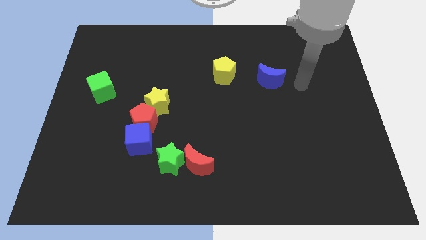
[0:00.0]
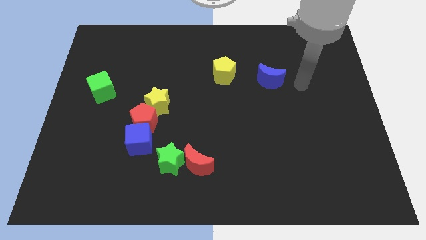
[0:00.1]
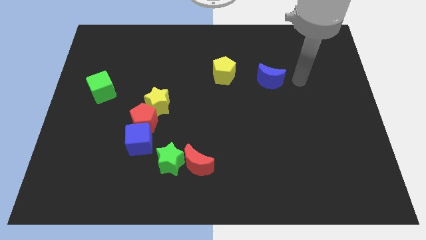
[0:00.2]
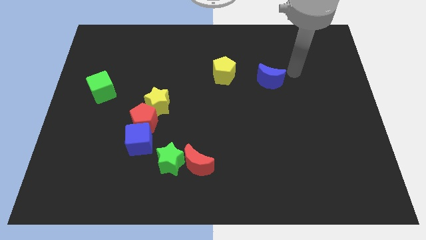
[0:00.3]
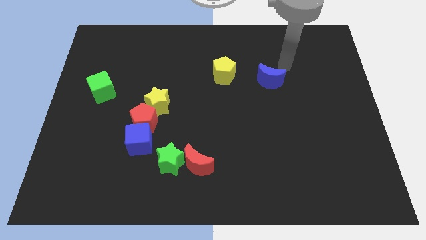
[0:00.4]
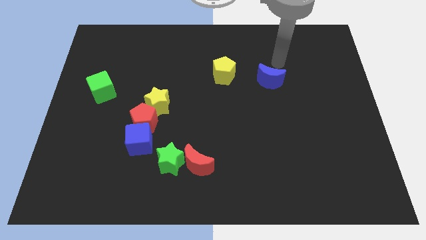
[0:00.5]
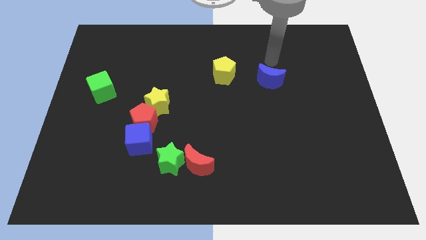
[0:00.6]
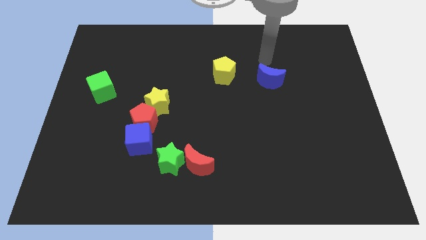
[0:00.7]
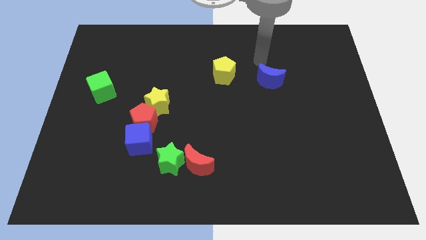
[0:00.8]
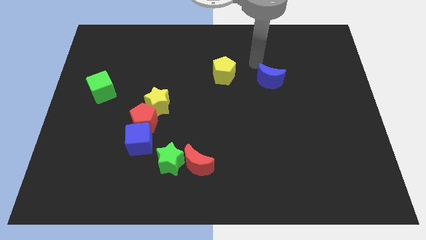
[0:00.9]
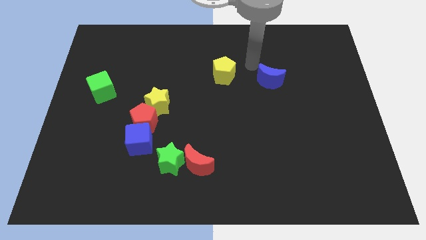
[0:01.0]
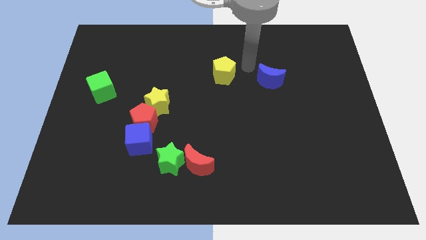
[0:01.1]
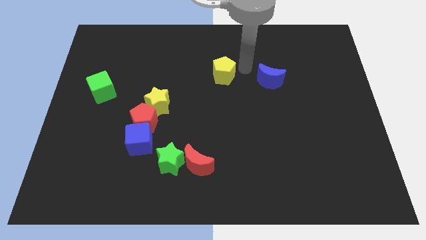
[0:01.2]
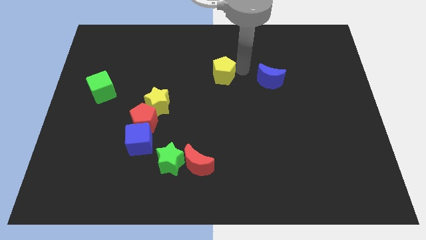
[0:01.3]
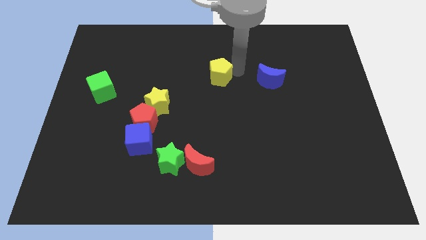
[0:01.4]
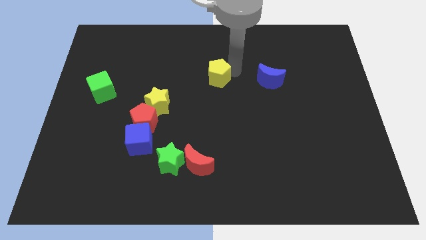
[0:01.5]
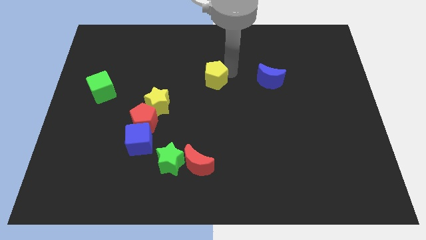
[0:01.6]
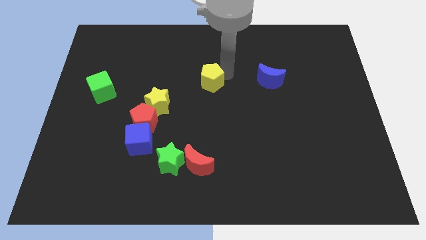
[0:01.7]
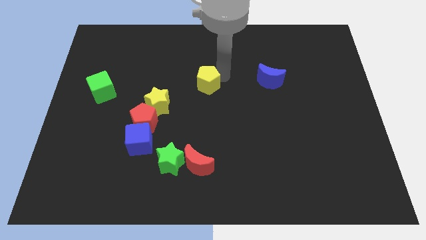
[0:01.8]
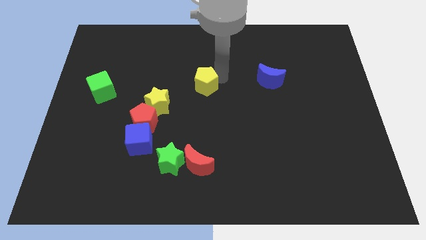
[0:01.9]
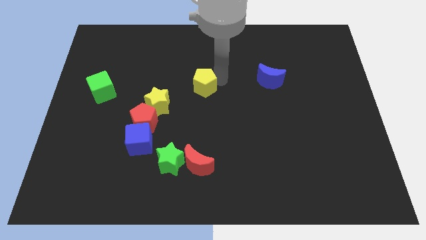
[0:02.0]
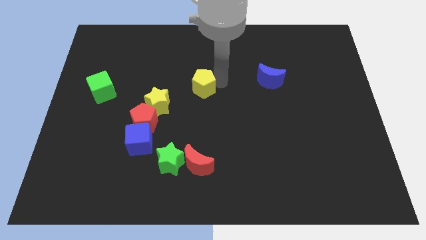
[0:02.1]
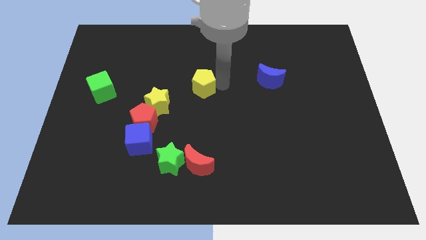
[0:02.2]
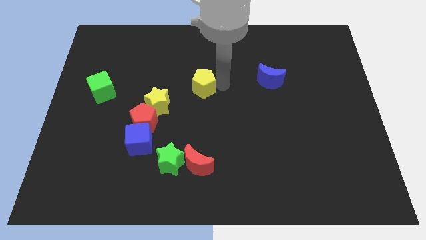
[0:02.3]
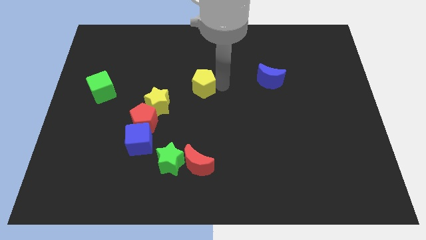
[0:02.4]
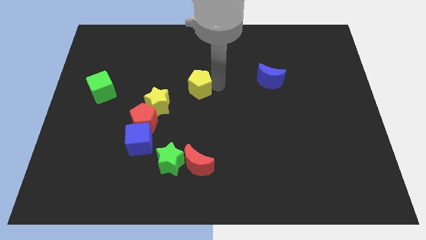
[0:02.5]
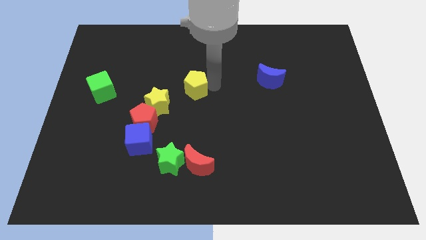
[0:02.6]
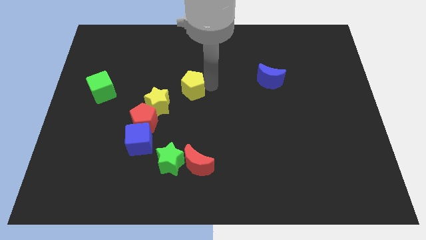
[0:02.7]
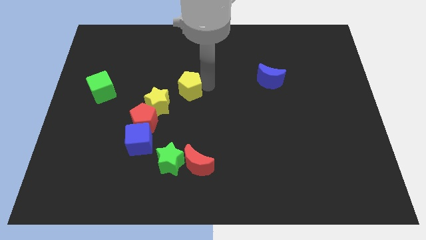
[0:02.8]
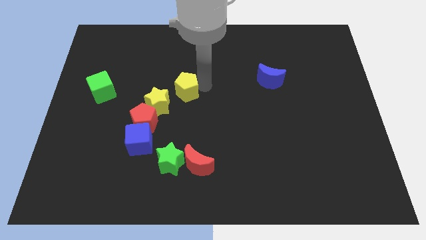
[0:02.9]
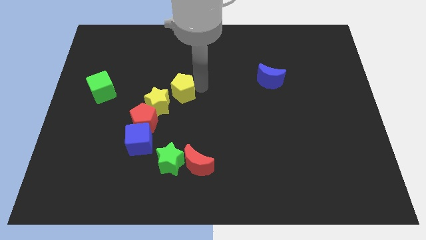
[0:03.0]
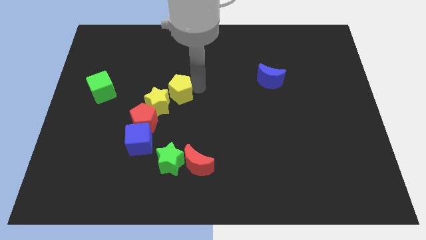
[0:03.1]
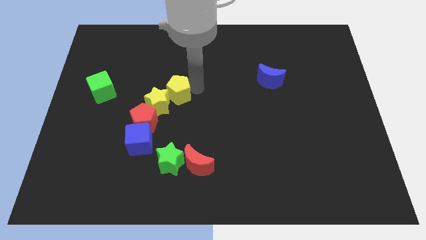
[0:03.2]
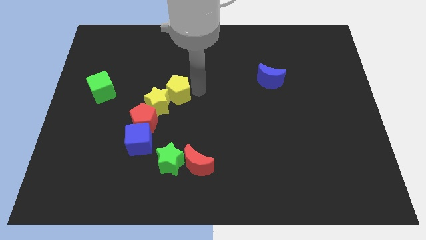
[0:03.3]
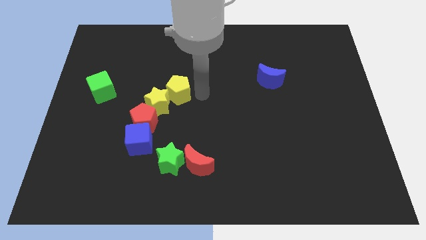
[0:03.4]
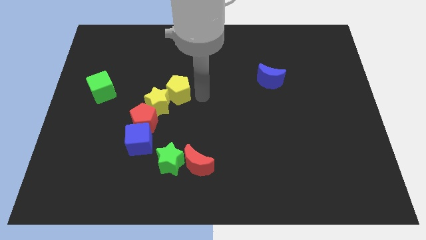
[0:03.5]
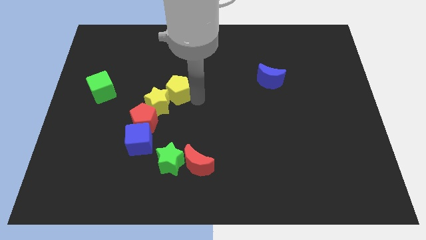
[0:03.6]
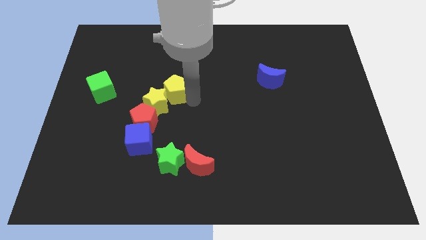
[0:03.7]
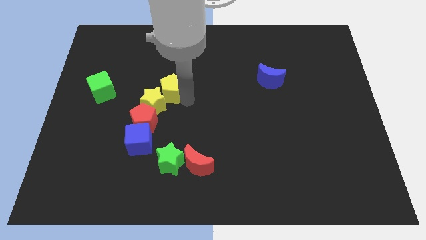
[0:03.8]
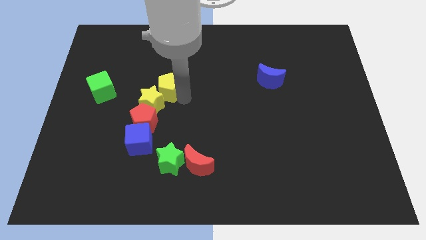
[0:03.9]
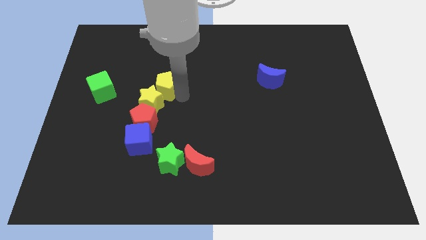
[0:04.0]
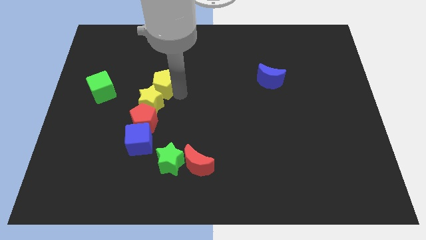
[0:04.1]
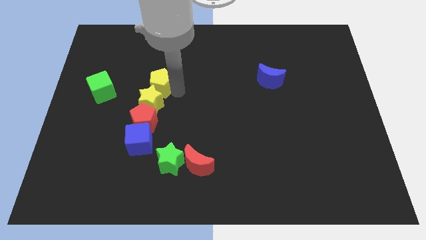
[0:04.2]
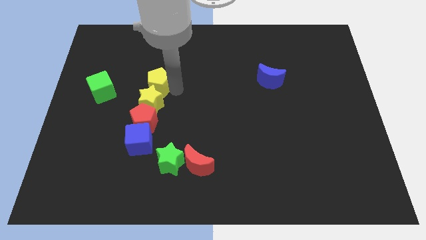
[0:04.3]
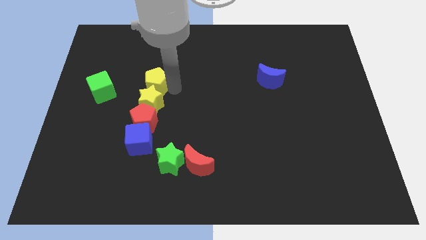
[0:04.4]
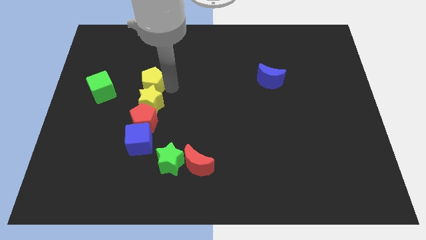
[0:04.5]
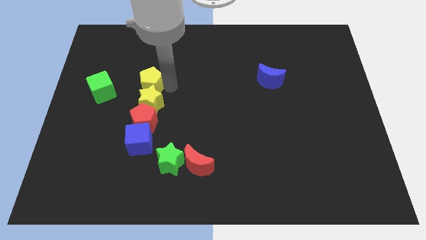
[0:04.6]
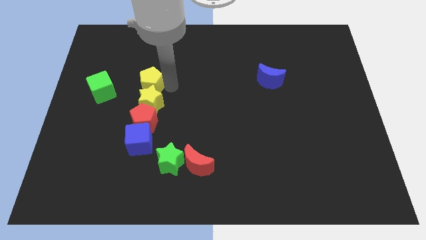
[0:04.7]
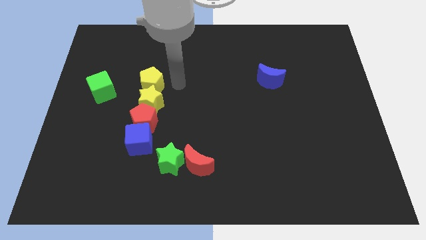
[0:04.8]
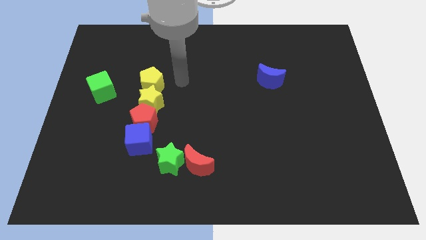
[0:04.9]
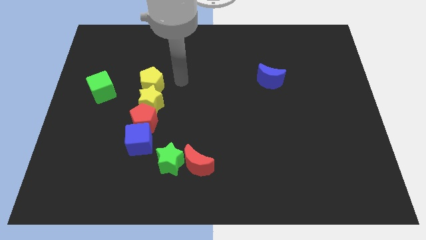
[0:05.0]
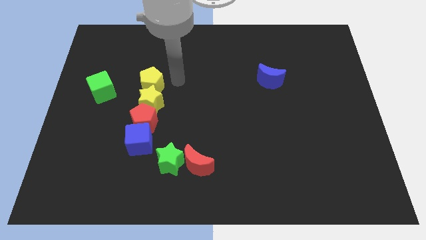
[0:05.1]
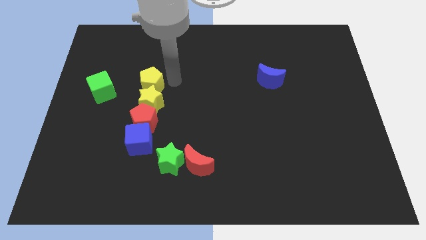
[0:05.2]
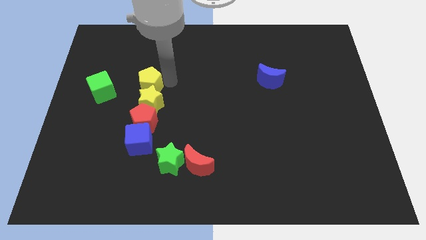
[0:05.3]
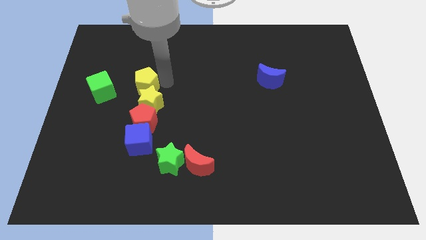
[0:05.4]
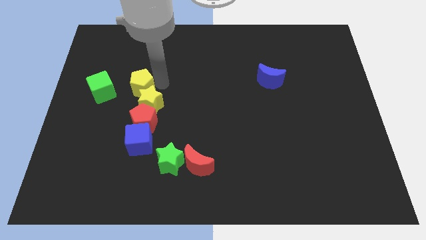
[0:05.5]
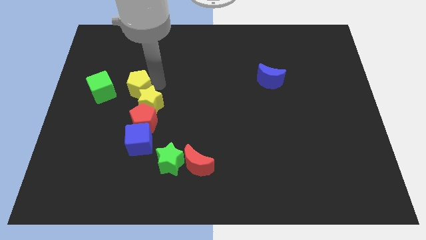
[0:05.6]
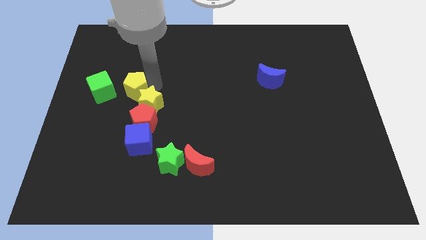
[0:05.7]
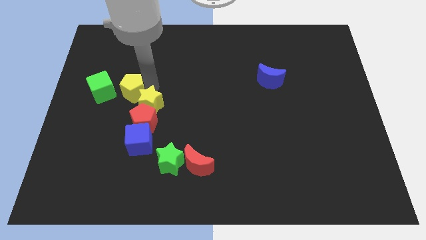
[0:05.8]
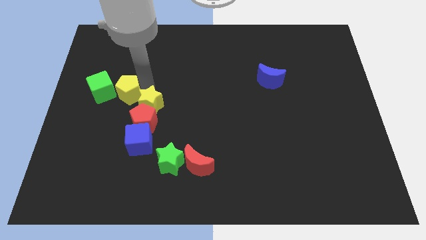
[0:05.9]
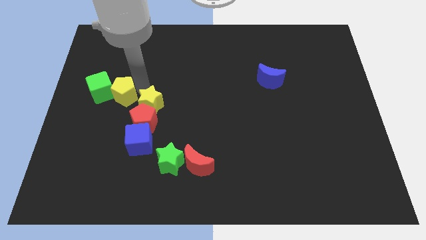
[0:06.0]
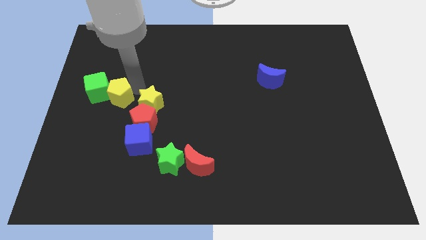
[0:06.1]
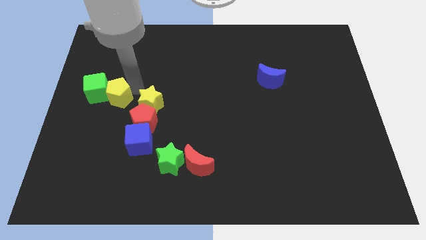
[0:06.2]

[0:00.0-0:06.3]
move the yellow pentagon close to the green cube

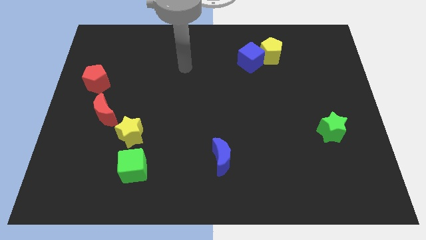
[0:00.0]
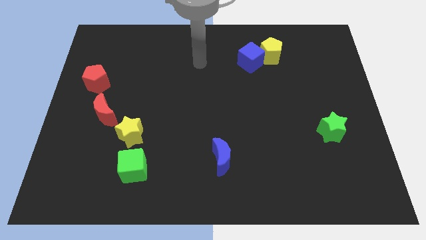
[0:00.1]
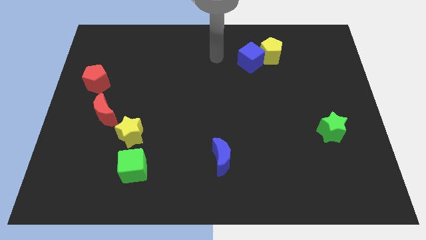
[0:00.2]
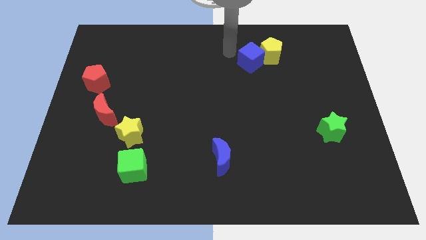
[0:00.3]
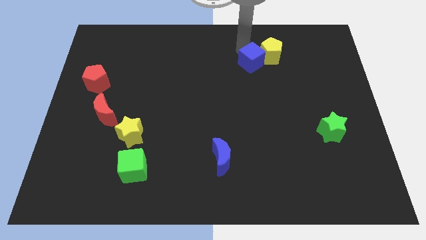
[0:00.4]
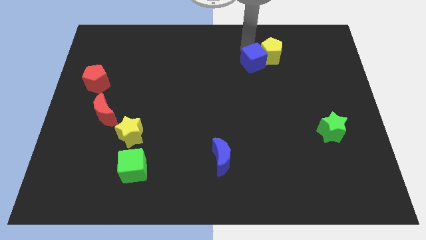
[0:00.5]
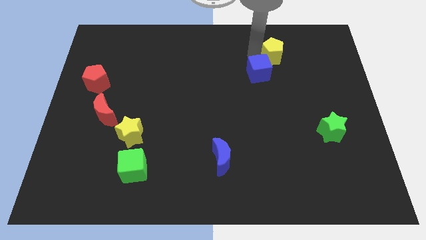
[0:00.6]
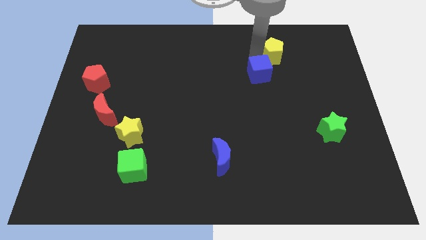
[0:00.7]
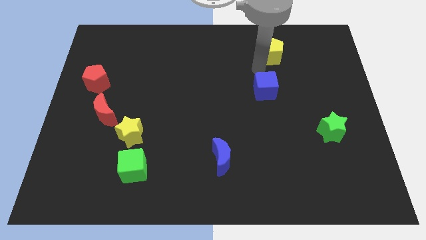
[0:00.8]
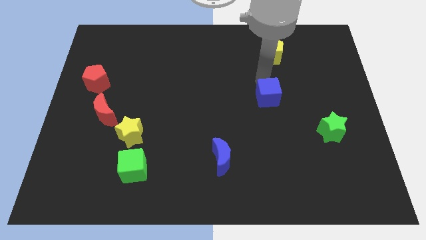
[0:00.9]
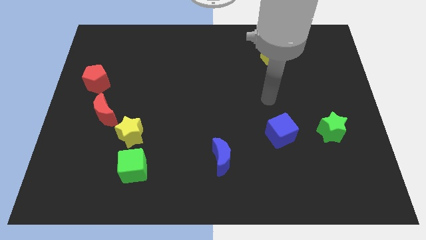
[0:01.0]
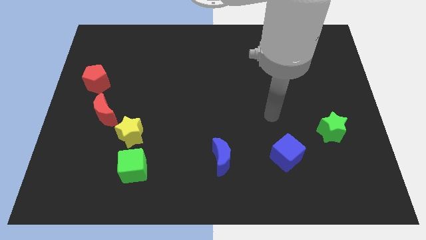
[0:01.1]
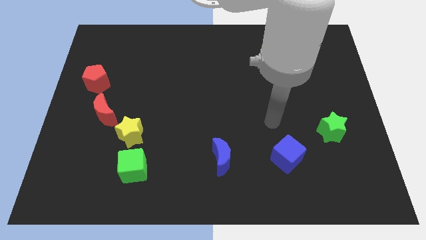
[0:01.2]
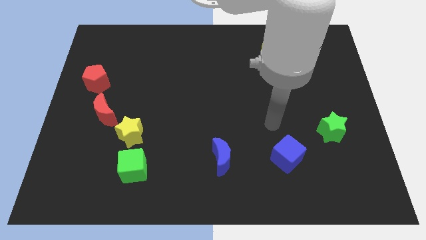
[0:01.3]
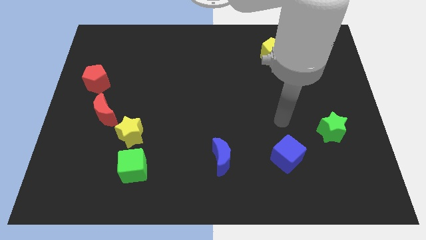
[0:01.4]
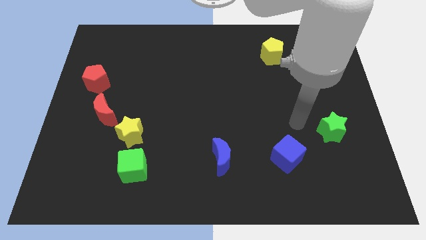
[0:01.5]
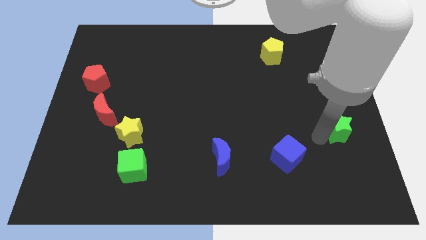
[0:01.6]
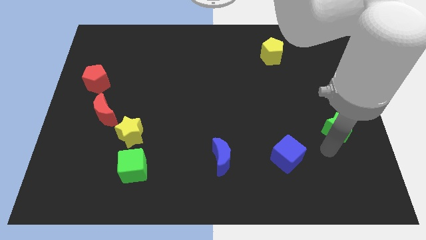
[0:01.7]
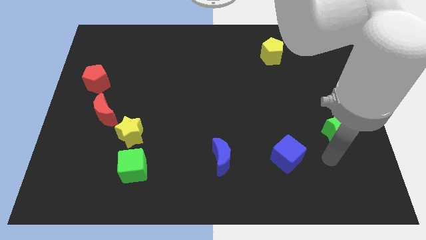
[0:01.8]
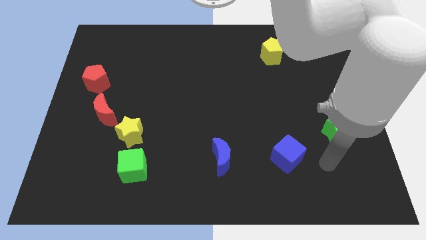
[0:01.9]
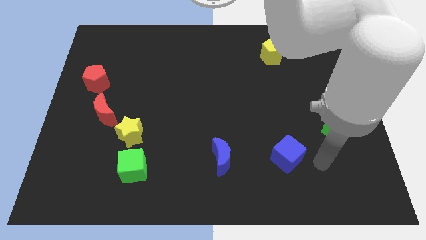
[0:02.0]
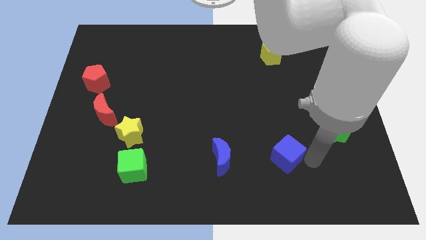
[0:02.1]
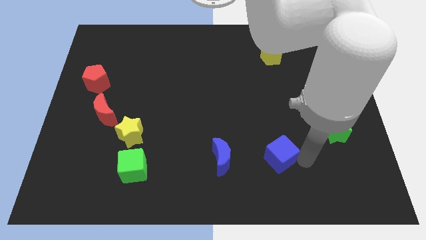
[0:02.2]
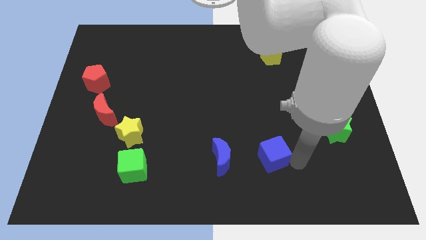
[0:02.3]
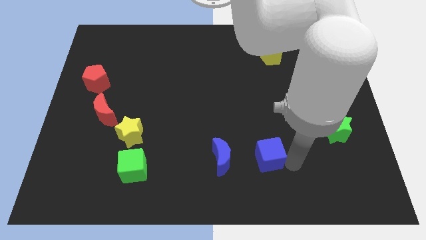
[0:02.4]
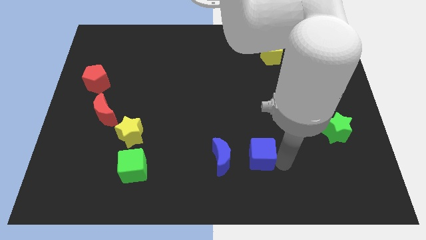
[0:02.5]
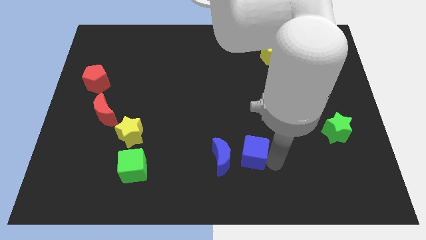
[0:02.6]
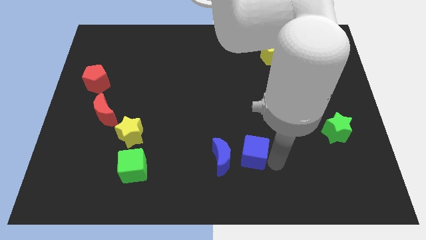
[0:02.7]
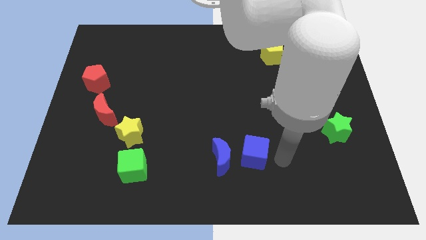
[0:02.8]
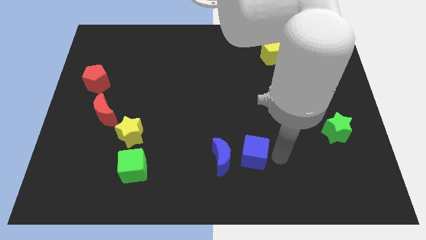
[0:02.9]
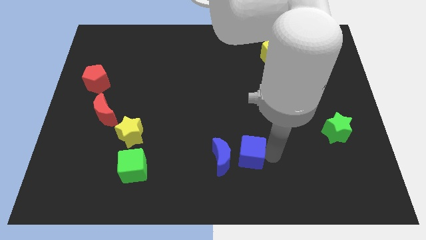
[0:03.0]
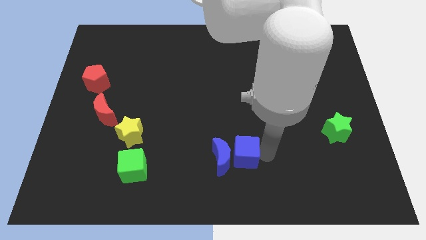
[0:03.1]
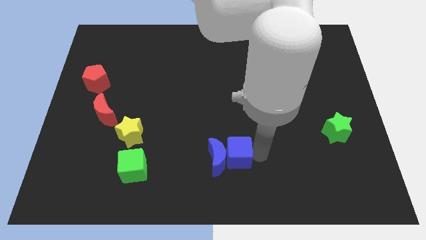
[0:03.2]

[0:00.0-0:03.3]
move the blue cube close to the blue moon
